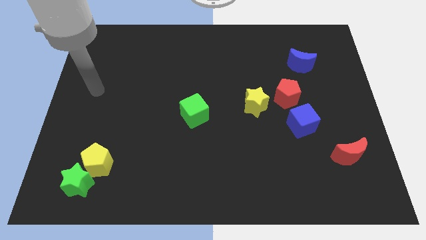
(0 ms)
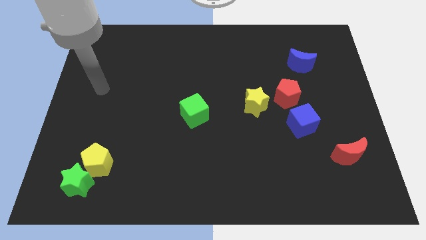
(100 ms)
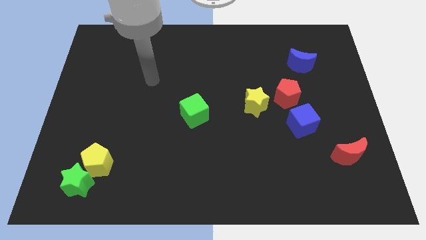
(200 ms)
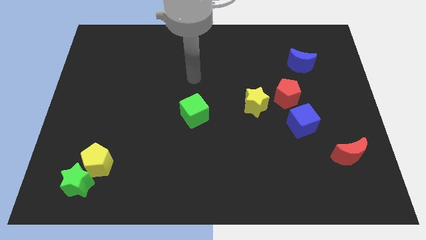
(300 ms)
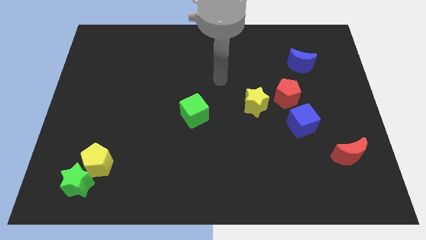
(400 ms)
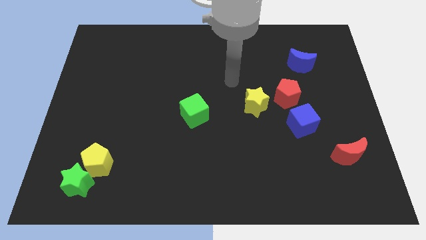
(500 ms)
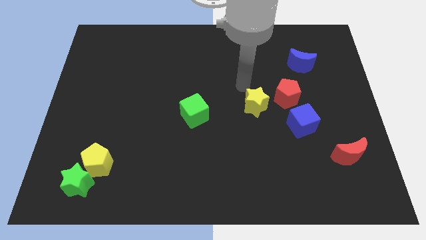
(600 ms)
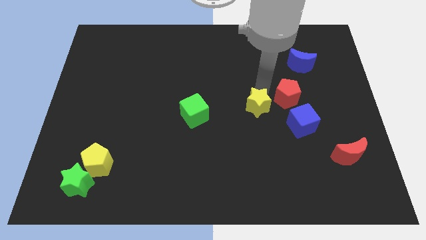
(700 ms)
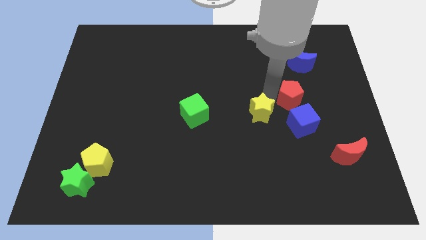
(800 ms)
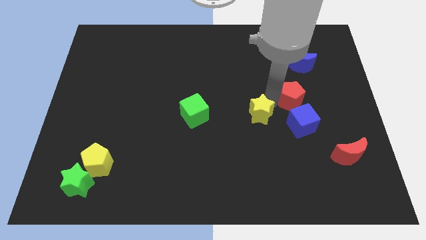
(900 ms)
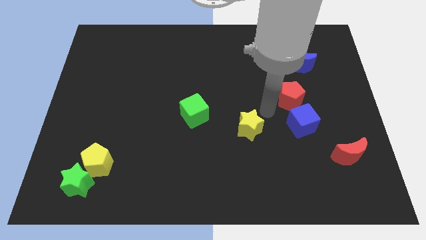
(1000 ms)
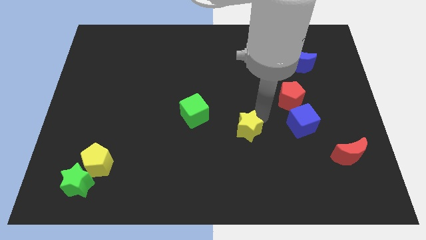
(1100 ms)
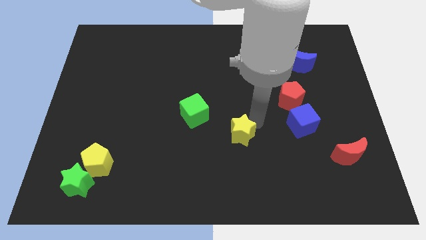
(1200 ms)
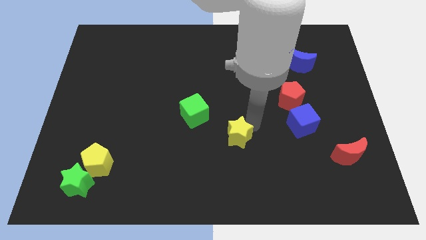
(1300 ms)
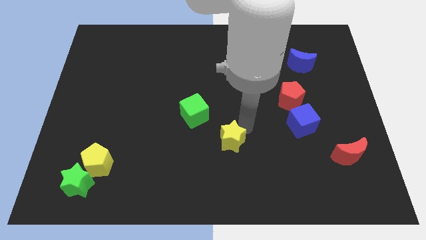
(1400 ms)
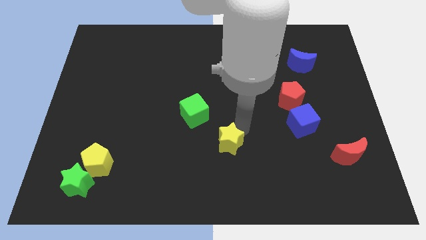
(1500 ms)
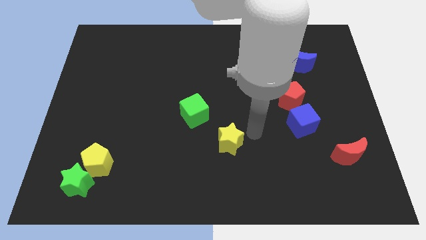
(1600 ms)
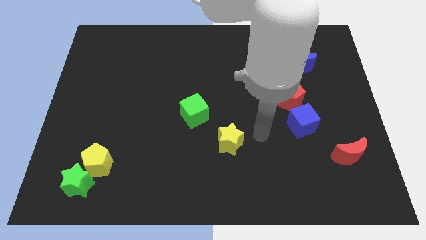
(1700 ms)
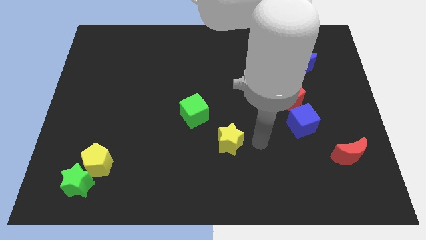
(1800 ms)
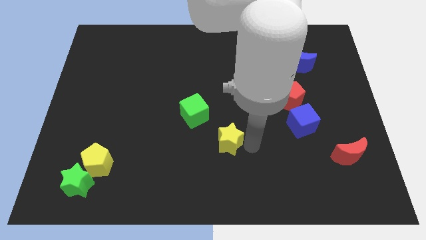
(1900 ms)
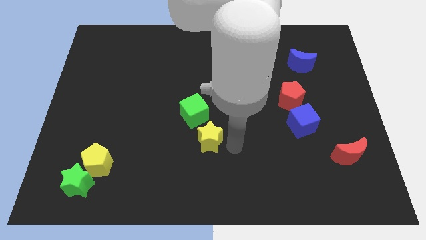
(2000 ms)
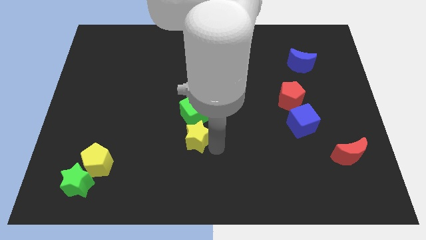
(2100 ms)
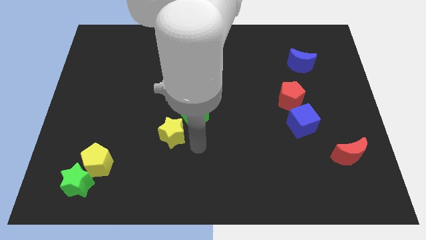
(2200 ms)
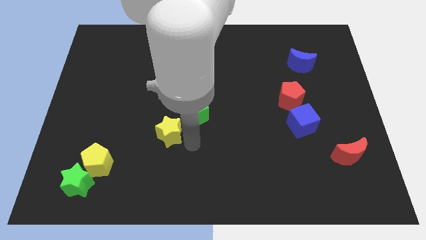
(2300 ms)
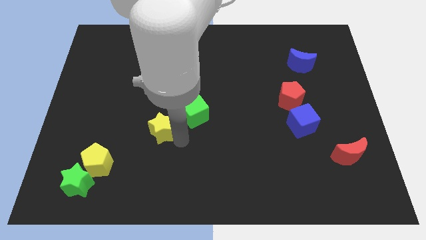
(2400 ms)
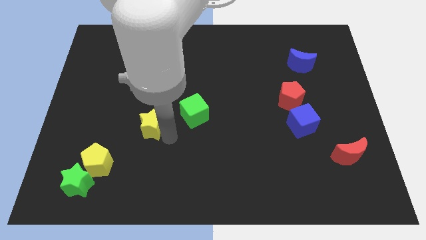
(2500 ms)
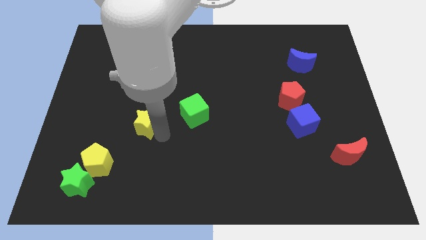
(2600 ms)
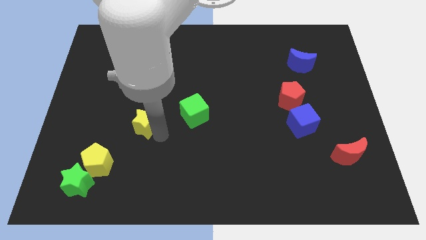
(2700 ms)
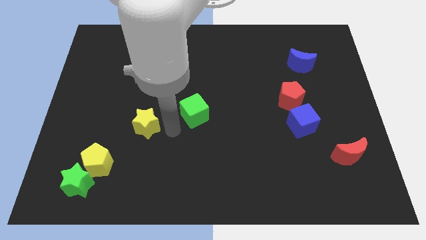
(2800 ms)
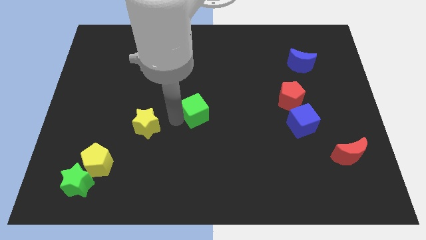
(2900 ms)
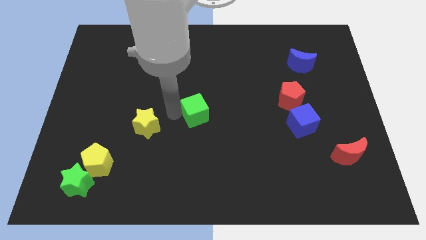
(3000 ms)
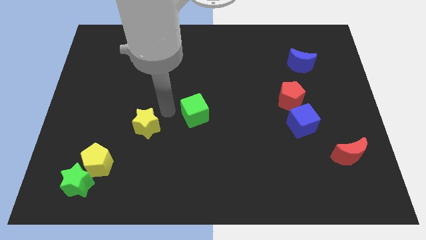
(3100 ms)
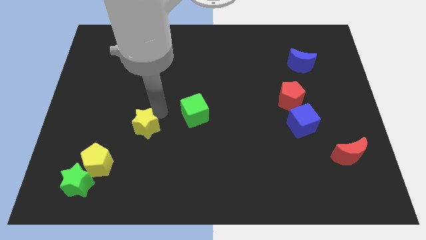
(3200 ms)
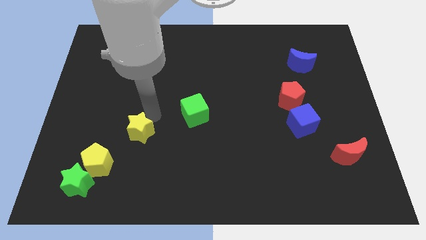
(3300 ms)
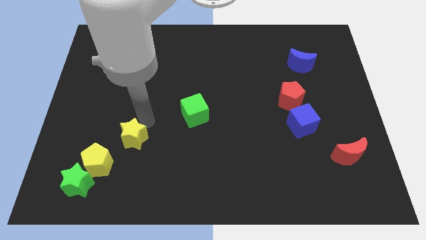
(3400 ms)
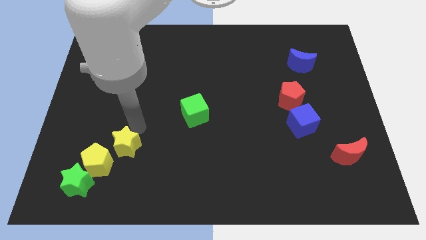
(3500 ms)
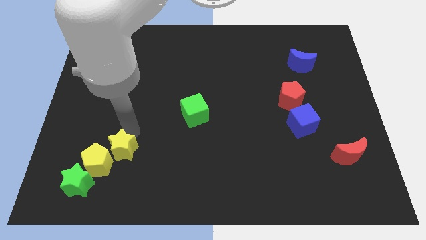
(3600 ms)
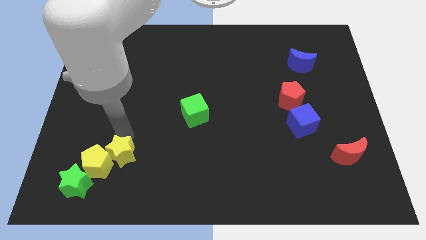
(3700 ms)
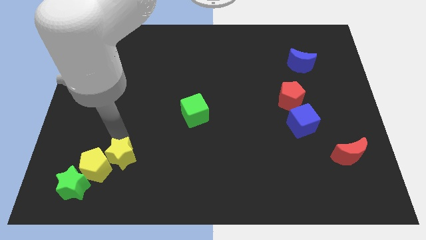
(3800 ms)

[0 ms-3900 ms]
put the yellow star to the yellow pentagon

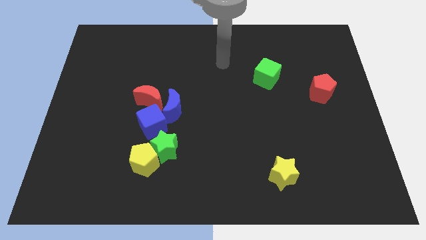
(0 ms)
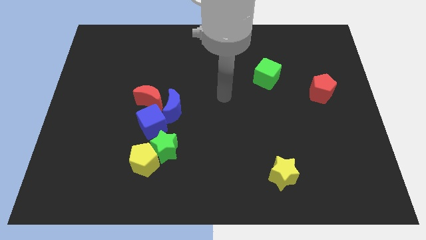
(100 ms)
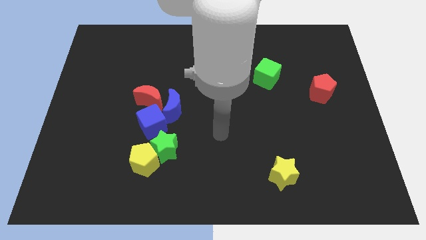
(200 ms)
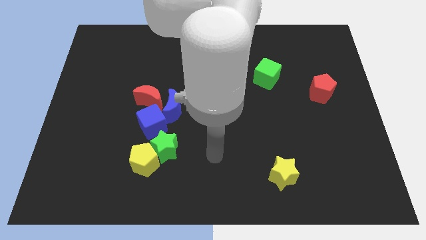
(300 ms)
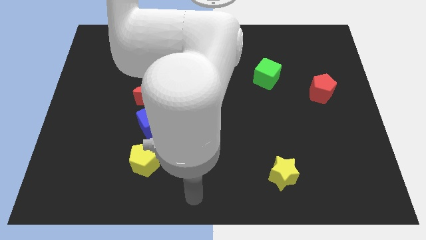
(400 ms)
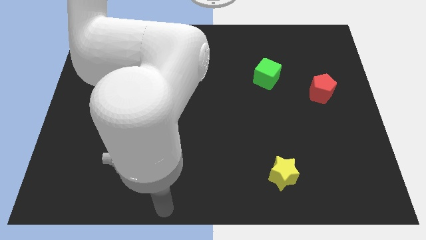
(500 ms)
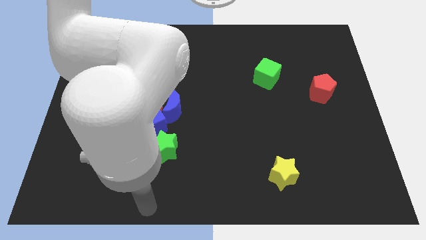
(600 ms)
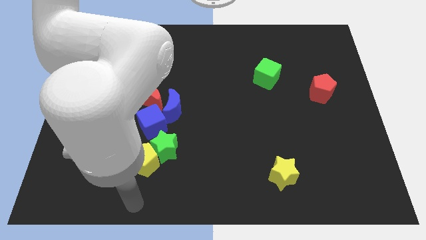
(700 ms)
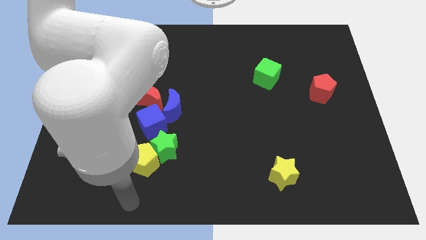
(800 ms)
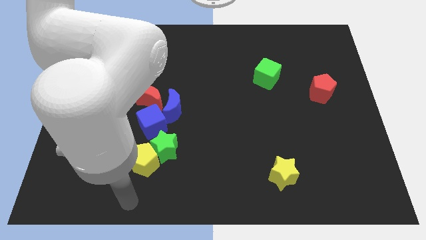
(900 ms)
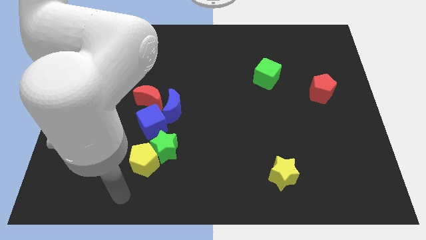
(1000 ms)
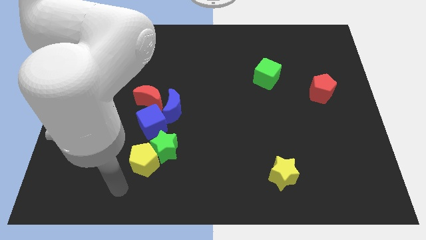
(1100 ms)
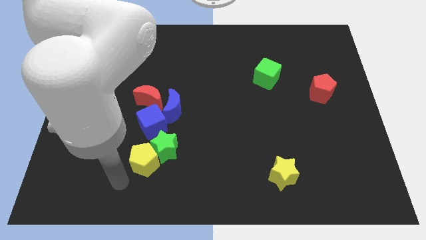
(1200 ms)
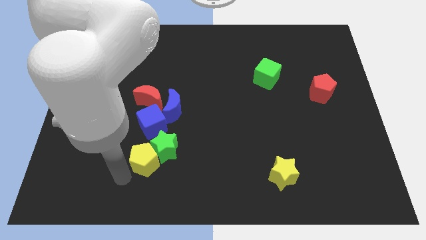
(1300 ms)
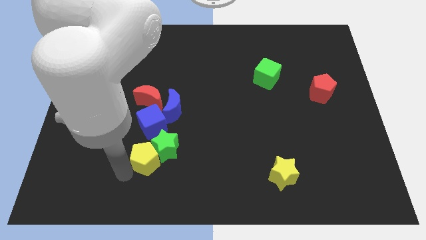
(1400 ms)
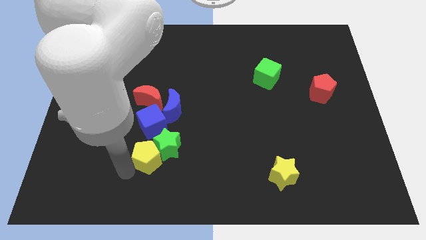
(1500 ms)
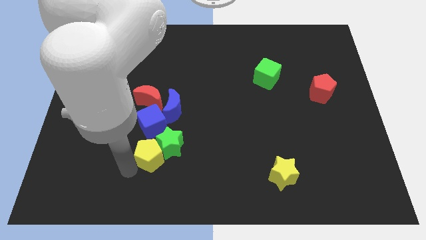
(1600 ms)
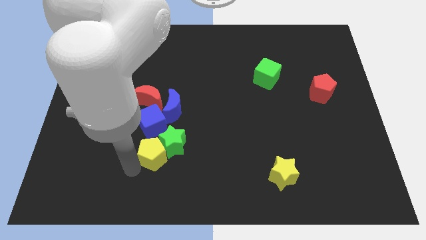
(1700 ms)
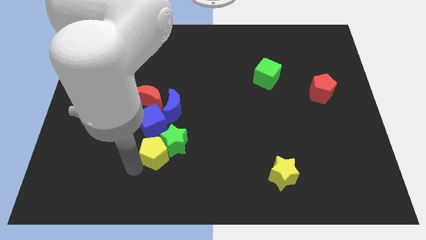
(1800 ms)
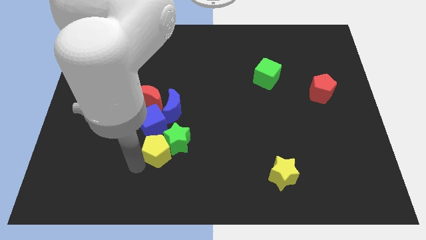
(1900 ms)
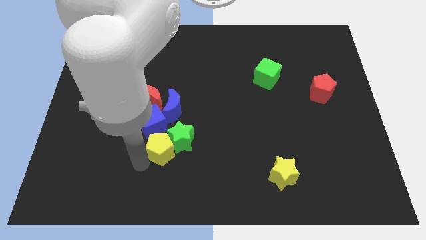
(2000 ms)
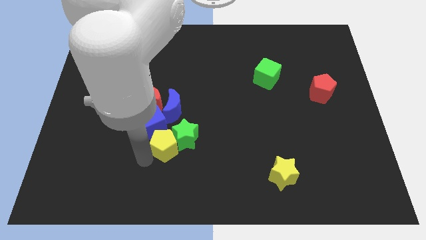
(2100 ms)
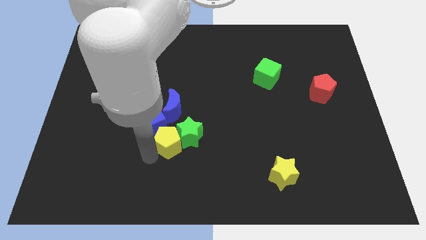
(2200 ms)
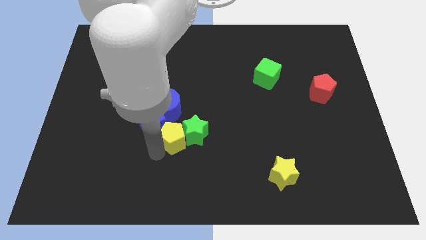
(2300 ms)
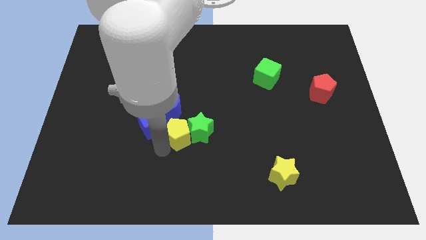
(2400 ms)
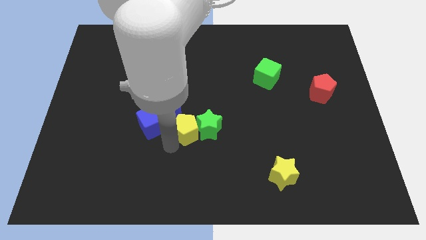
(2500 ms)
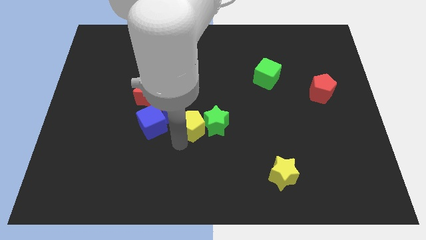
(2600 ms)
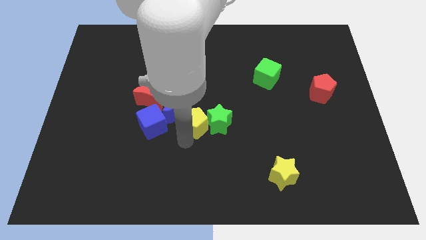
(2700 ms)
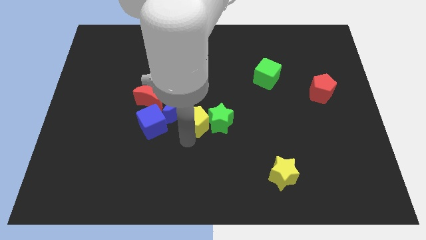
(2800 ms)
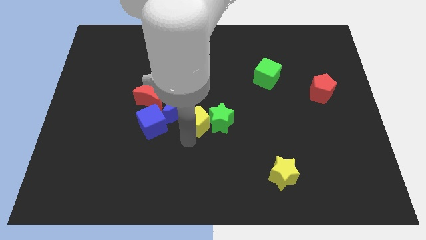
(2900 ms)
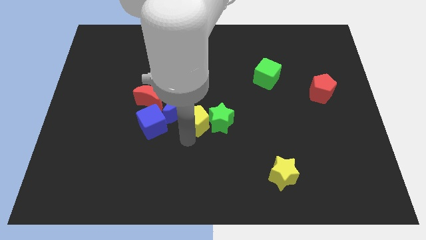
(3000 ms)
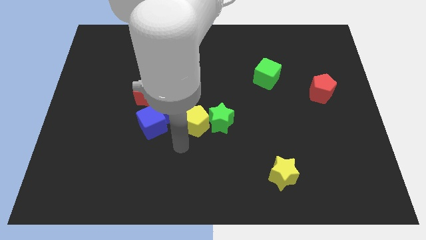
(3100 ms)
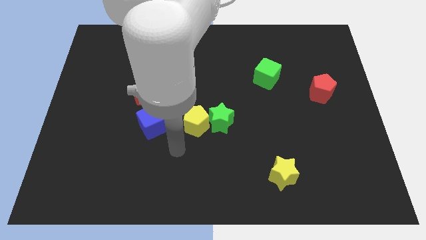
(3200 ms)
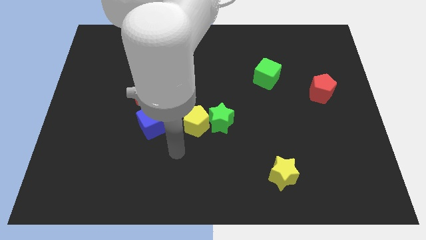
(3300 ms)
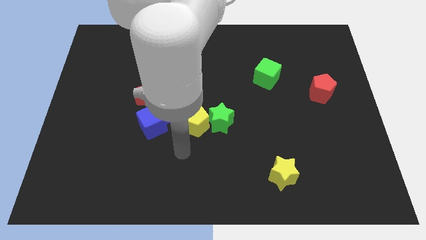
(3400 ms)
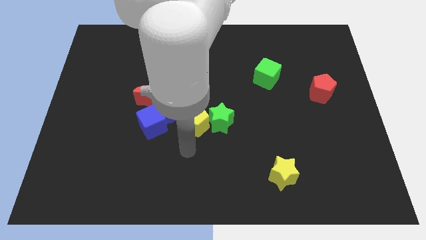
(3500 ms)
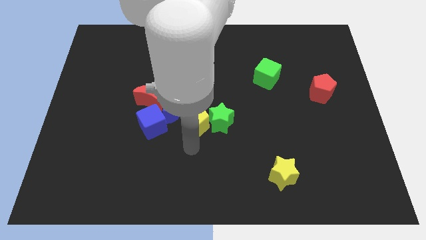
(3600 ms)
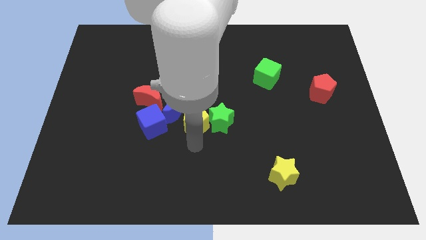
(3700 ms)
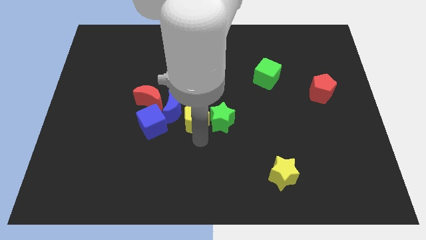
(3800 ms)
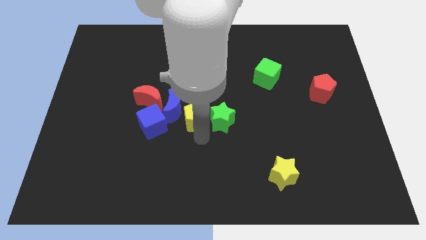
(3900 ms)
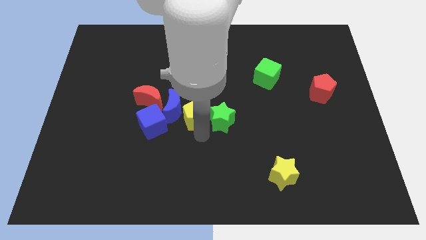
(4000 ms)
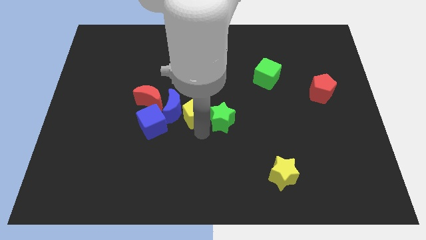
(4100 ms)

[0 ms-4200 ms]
slide the yellow pentagon to the blue moon

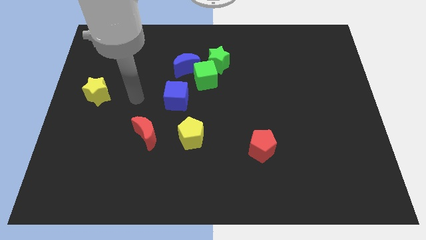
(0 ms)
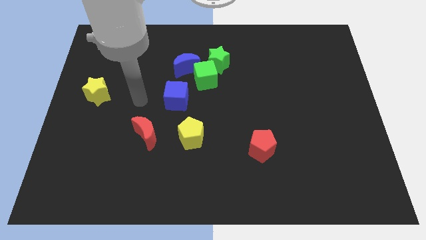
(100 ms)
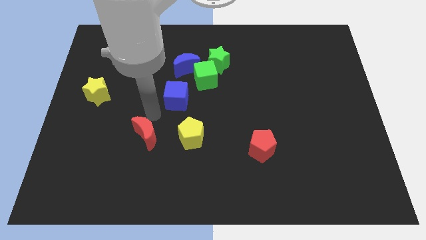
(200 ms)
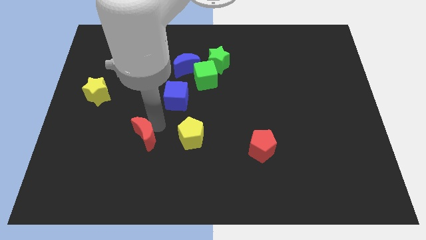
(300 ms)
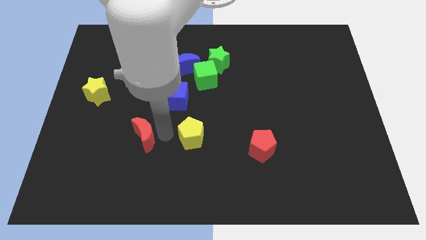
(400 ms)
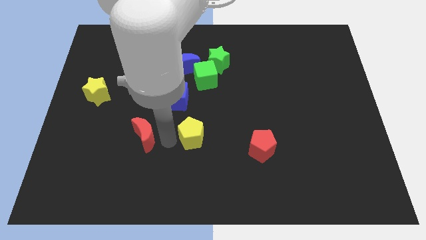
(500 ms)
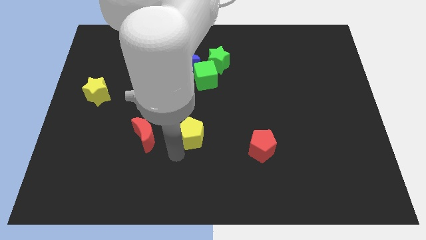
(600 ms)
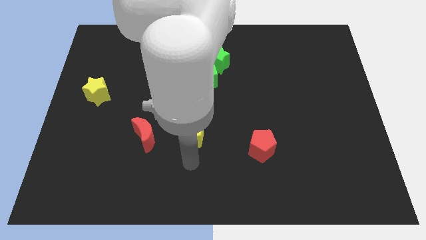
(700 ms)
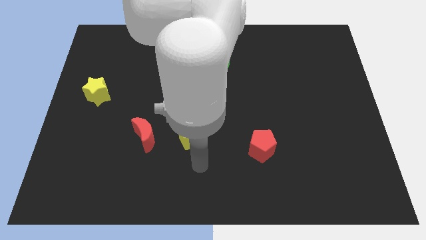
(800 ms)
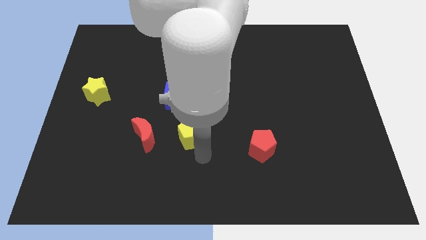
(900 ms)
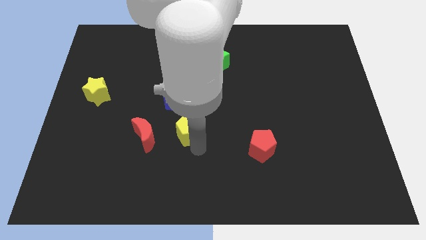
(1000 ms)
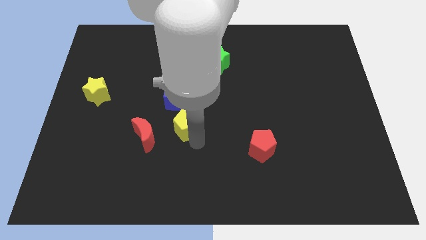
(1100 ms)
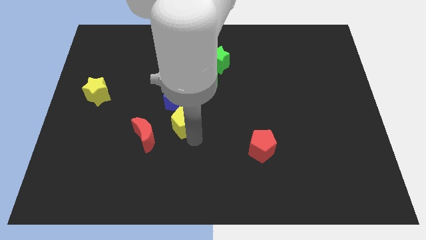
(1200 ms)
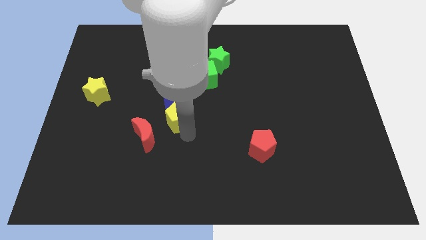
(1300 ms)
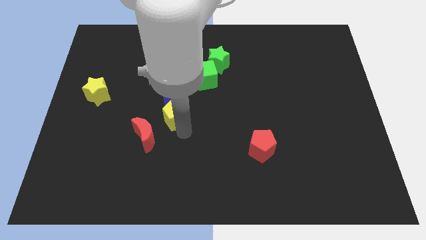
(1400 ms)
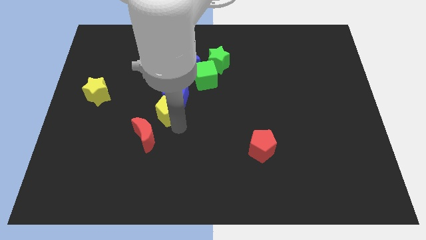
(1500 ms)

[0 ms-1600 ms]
slide the yellow pentagon next to the blue cube
